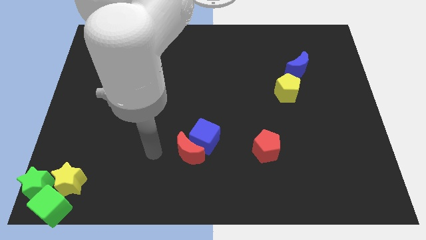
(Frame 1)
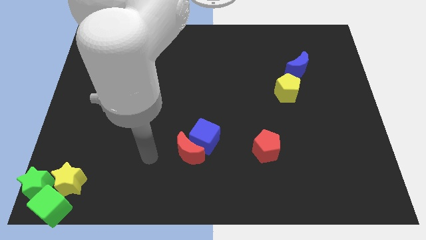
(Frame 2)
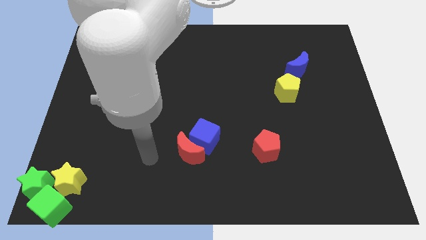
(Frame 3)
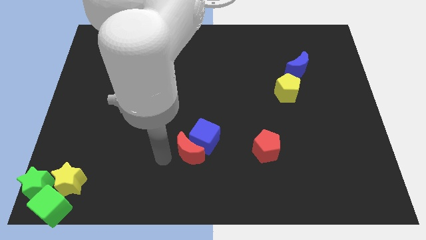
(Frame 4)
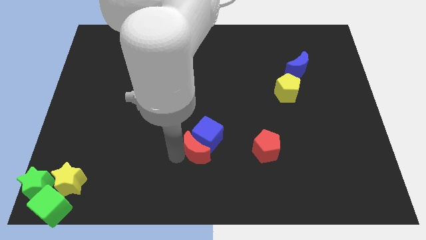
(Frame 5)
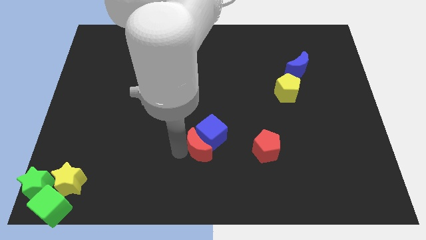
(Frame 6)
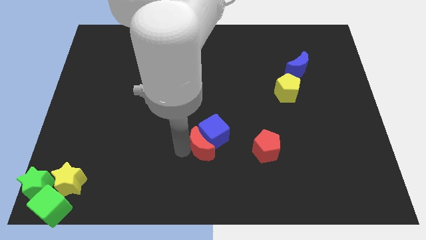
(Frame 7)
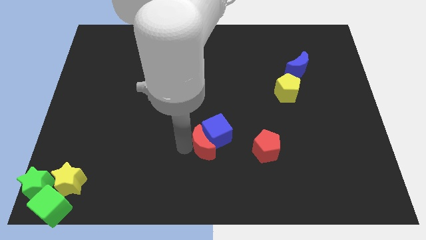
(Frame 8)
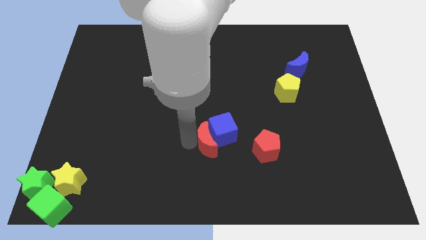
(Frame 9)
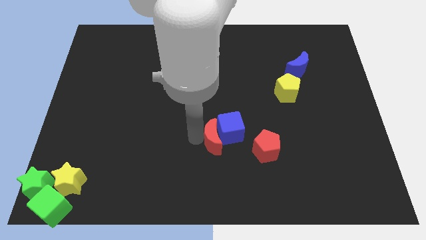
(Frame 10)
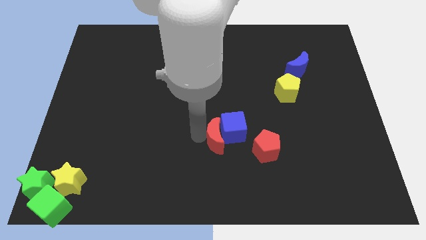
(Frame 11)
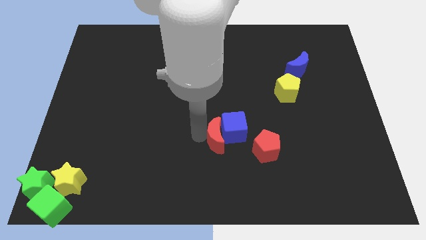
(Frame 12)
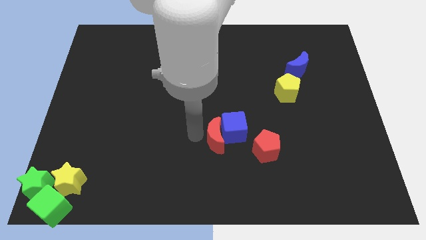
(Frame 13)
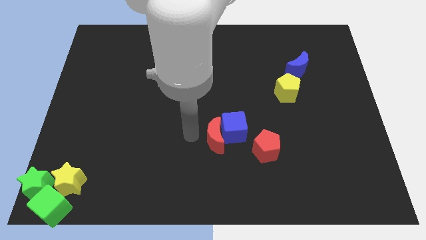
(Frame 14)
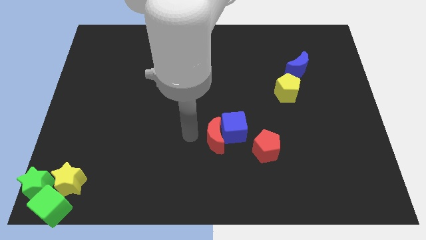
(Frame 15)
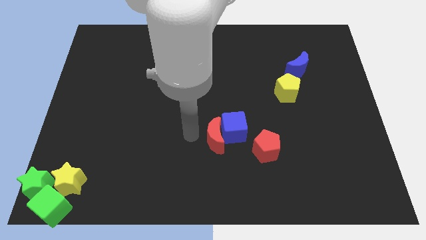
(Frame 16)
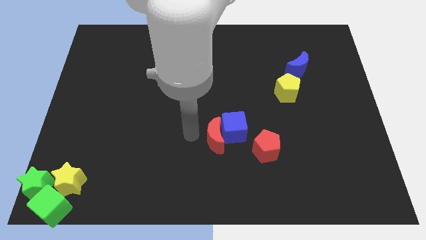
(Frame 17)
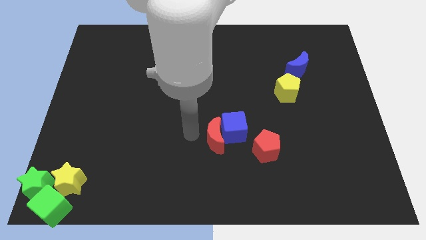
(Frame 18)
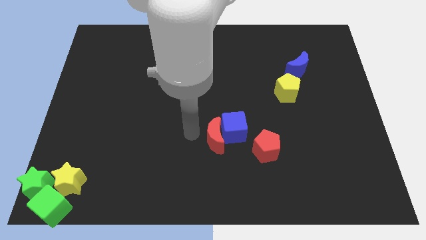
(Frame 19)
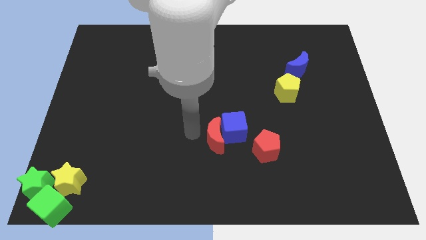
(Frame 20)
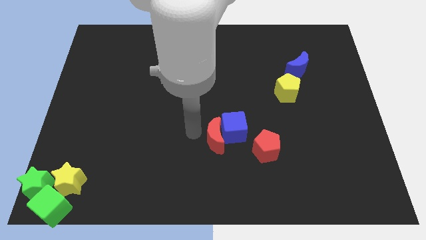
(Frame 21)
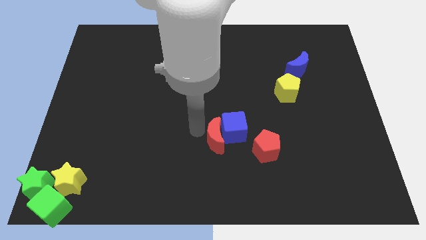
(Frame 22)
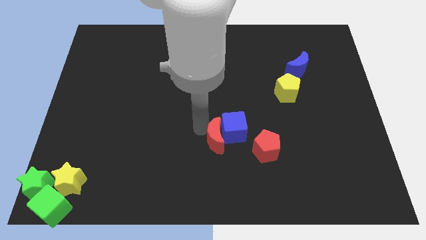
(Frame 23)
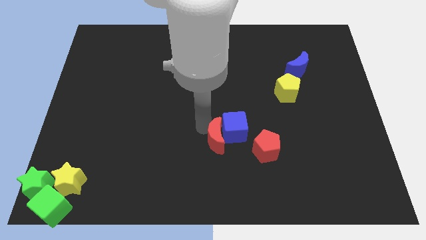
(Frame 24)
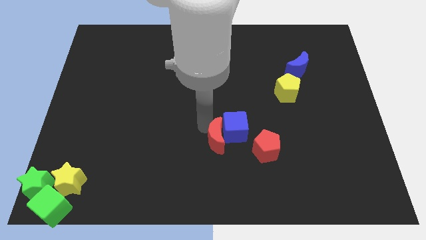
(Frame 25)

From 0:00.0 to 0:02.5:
push the red crescent and blue cube slightly right side

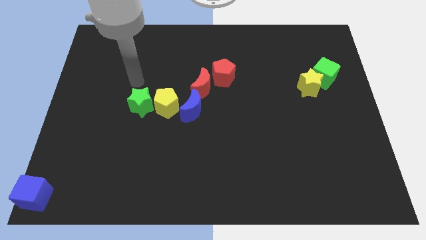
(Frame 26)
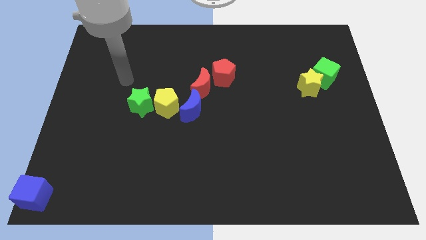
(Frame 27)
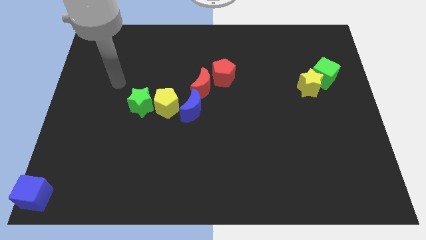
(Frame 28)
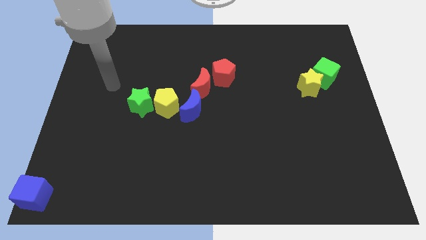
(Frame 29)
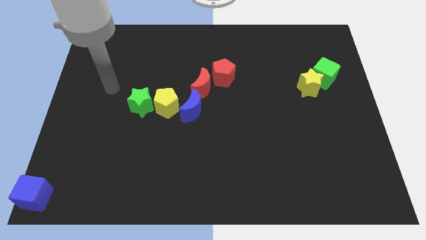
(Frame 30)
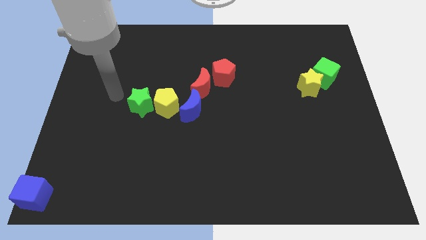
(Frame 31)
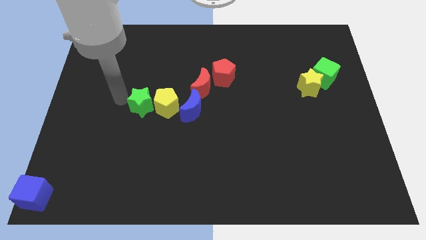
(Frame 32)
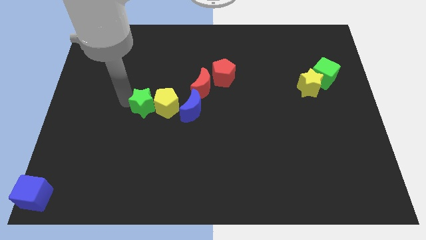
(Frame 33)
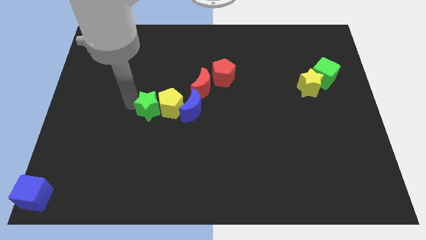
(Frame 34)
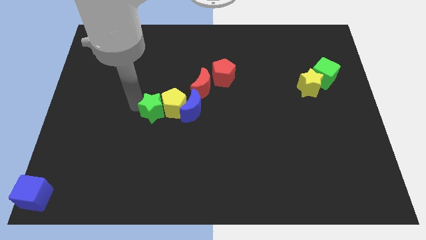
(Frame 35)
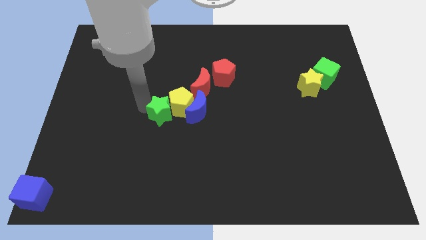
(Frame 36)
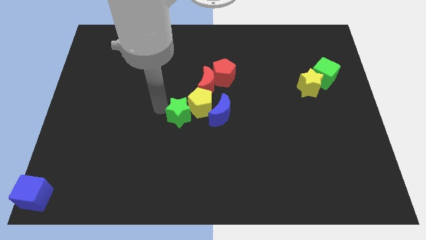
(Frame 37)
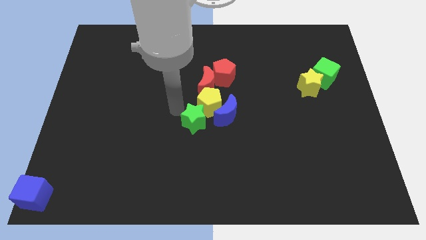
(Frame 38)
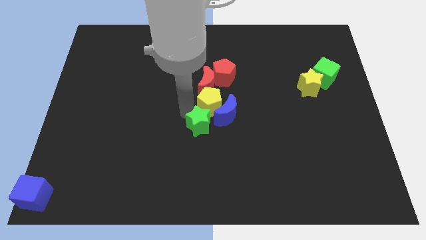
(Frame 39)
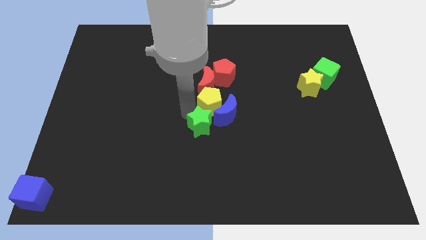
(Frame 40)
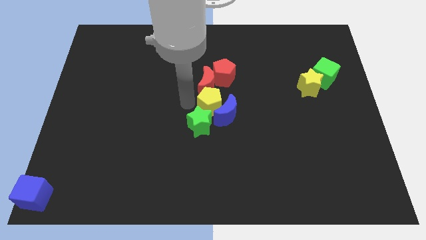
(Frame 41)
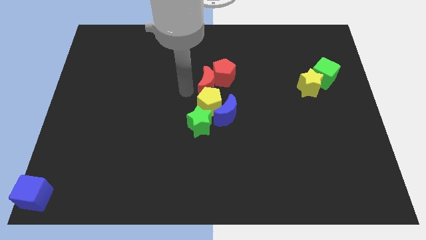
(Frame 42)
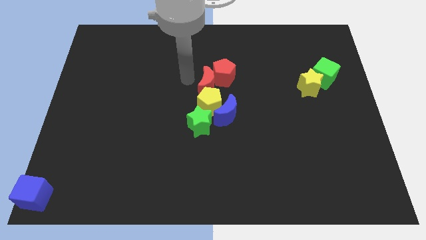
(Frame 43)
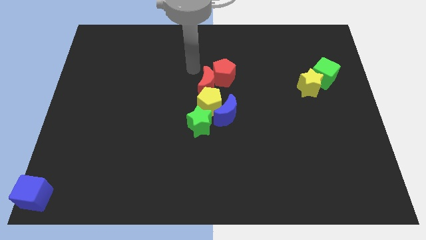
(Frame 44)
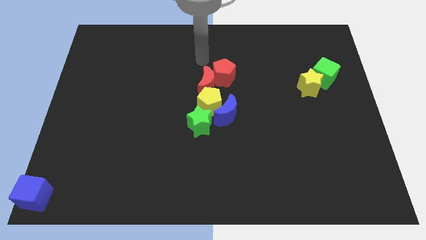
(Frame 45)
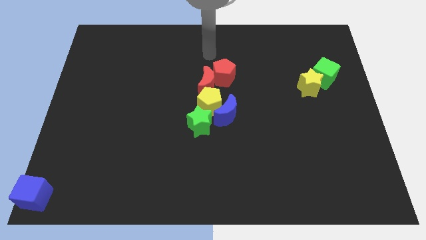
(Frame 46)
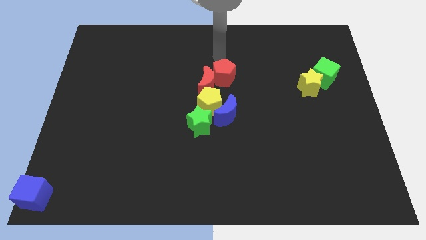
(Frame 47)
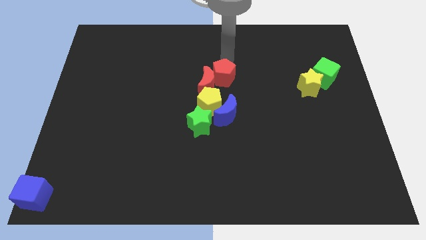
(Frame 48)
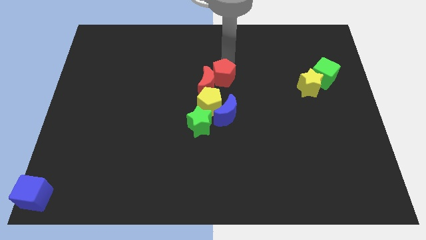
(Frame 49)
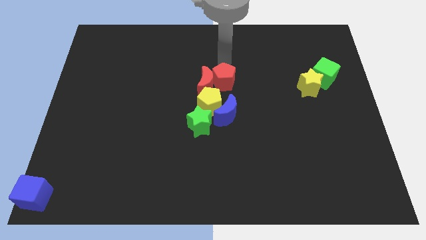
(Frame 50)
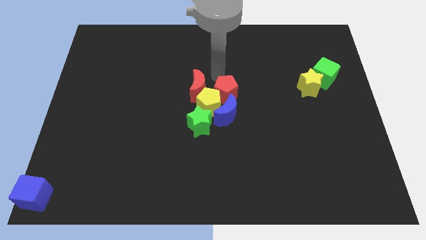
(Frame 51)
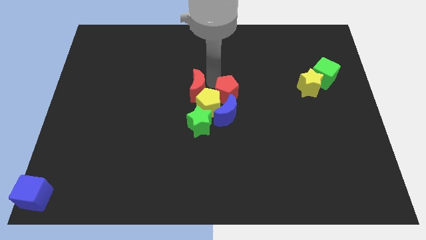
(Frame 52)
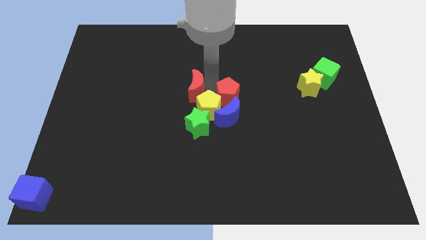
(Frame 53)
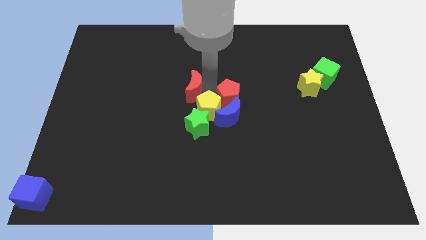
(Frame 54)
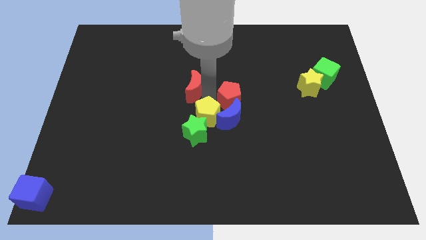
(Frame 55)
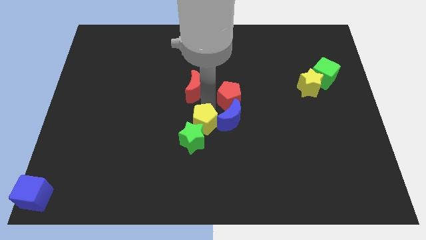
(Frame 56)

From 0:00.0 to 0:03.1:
separate the blue moon from the red moon

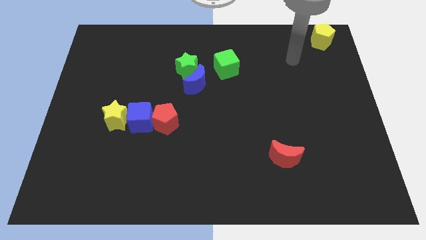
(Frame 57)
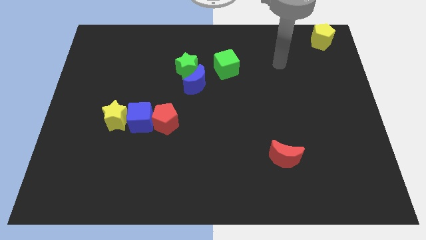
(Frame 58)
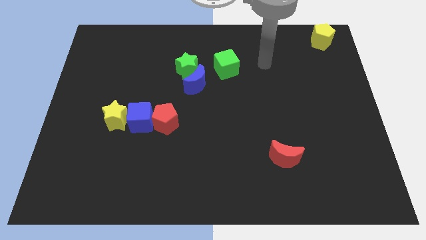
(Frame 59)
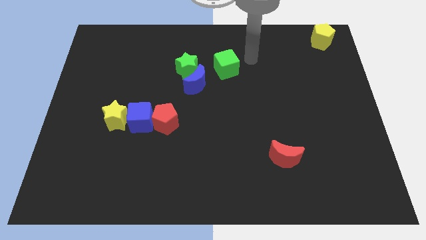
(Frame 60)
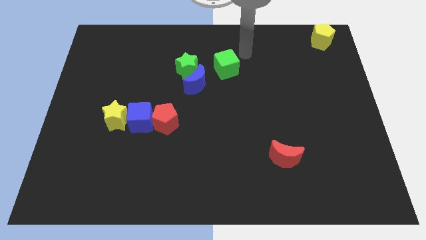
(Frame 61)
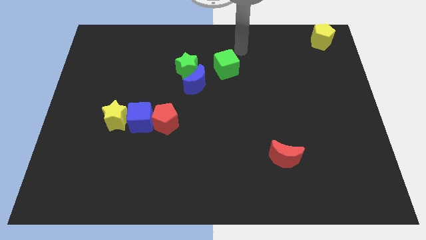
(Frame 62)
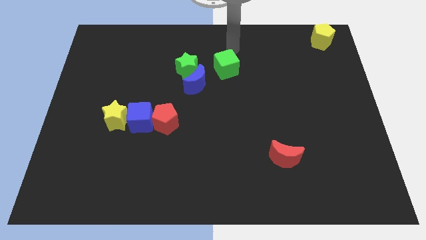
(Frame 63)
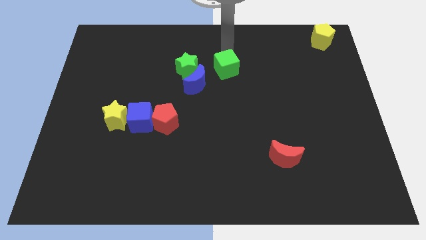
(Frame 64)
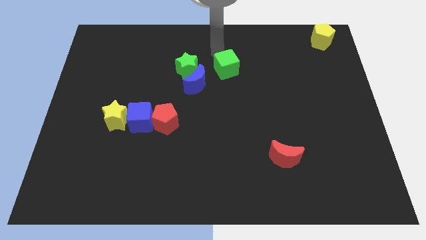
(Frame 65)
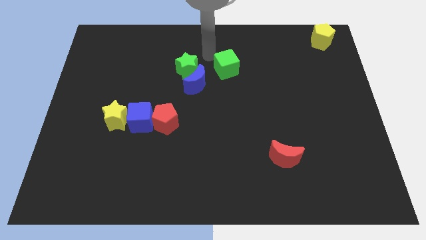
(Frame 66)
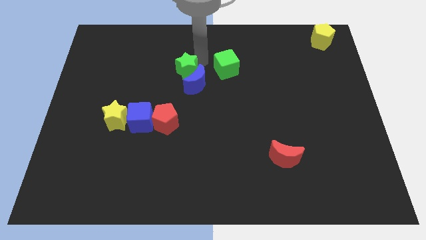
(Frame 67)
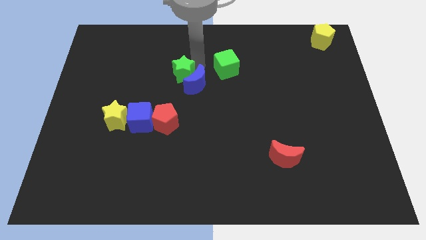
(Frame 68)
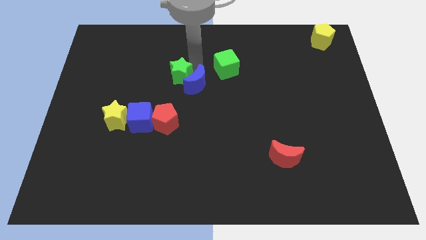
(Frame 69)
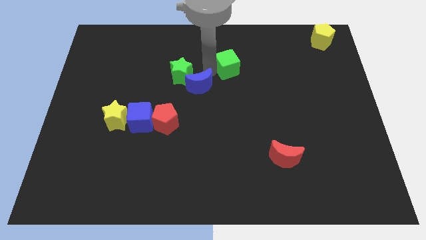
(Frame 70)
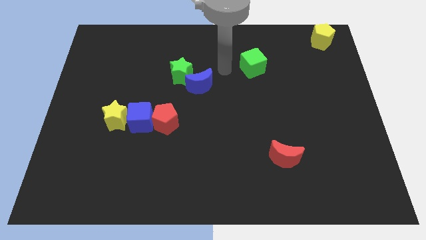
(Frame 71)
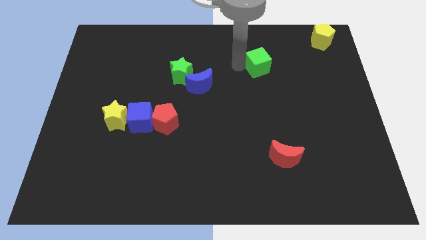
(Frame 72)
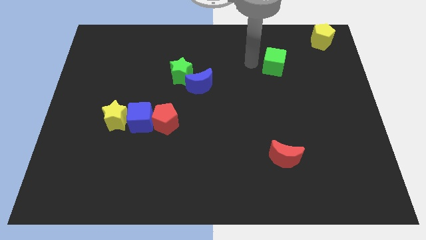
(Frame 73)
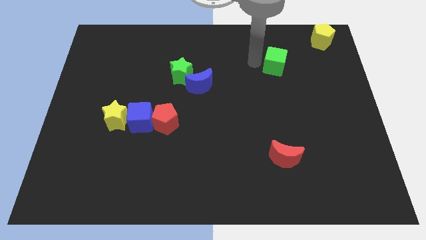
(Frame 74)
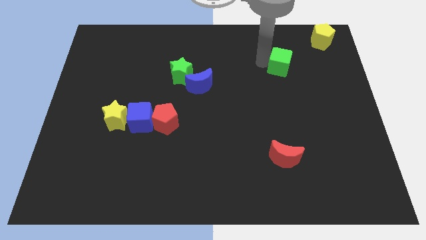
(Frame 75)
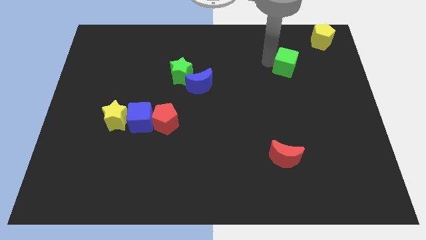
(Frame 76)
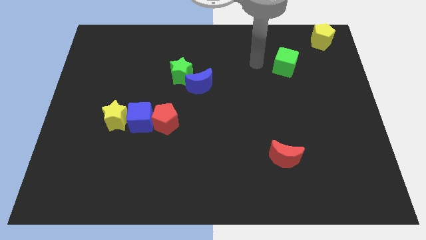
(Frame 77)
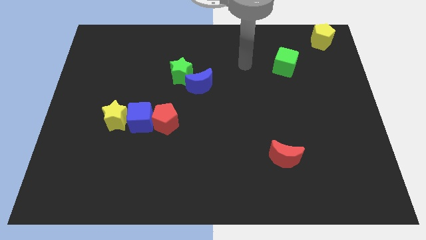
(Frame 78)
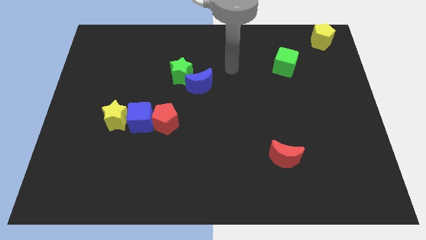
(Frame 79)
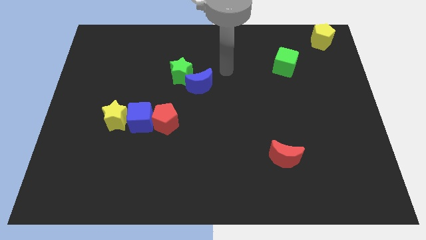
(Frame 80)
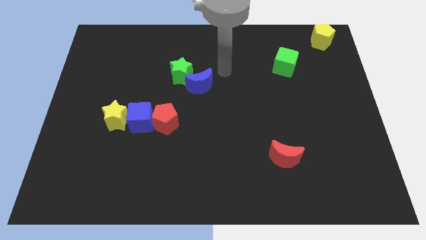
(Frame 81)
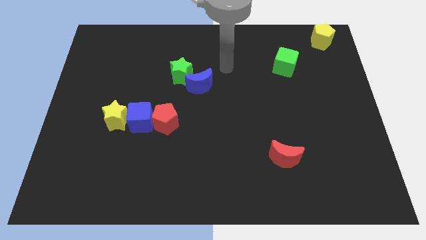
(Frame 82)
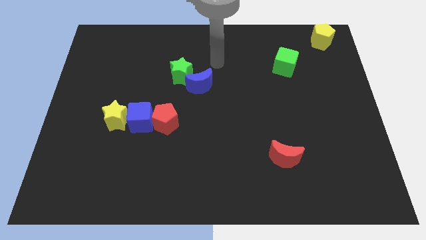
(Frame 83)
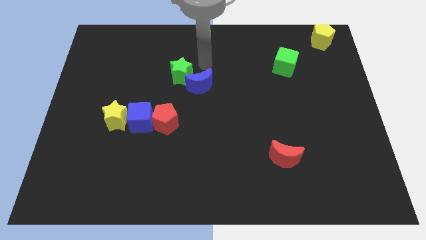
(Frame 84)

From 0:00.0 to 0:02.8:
push green block away from green star and blue crescent

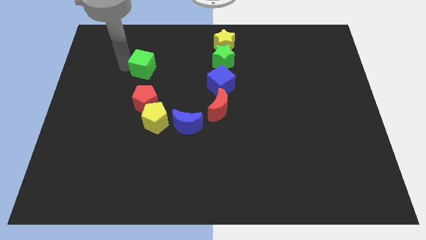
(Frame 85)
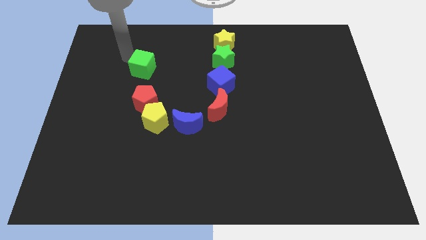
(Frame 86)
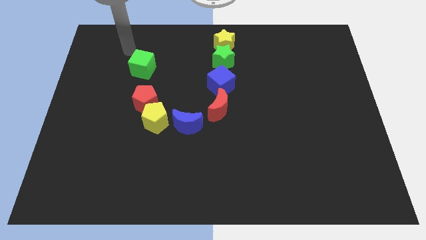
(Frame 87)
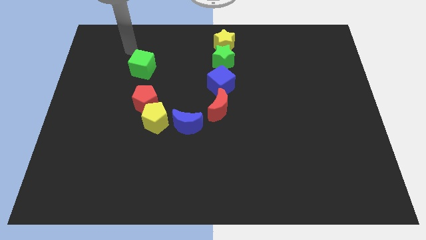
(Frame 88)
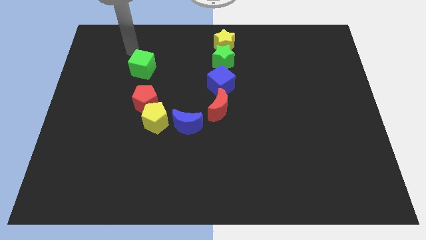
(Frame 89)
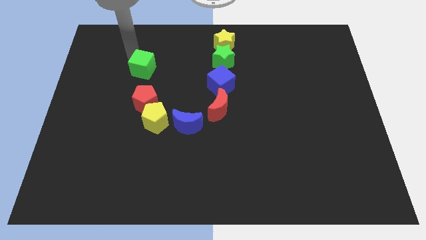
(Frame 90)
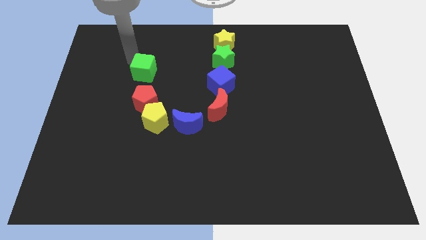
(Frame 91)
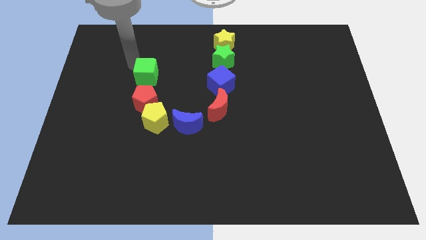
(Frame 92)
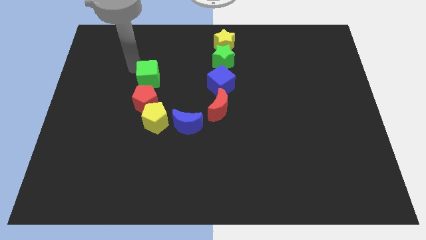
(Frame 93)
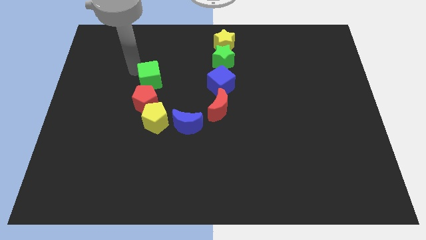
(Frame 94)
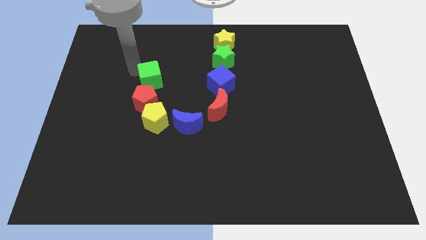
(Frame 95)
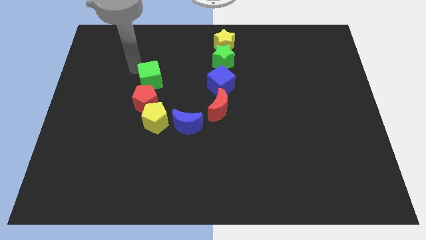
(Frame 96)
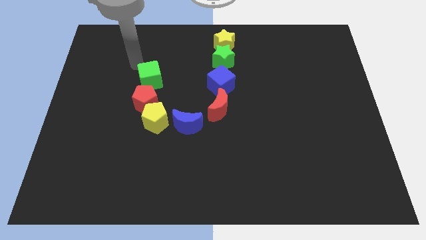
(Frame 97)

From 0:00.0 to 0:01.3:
move the green cube close to the red pentagon
